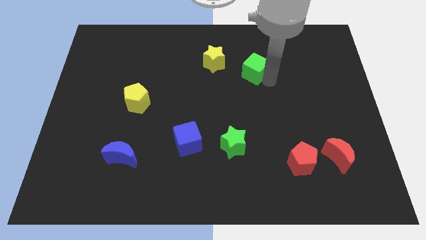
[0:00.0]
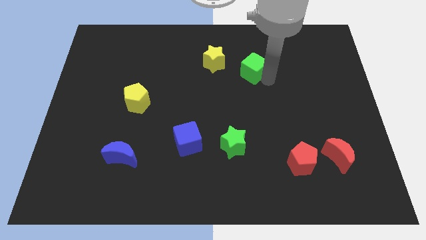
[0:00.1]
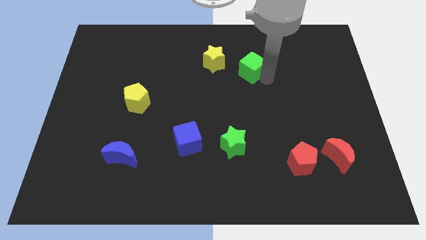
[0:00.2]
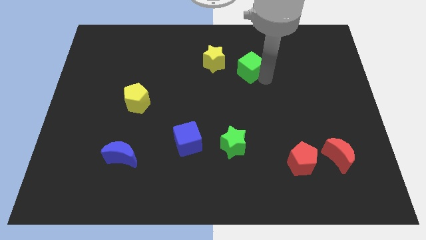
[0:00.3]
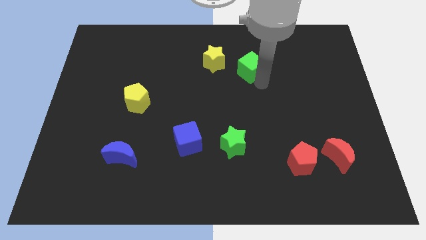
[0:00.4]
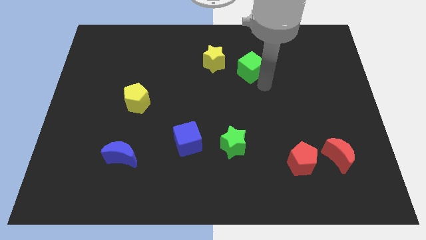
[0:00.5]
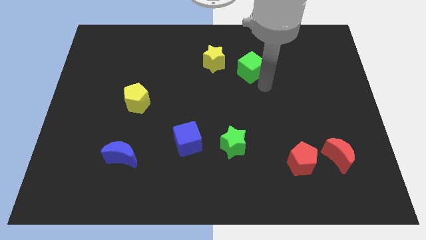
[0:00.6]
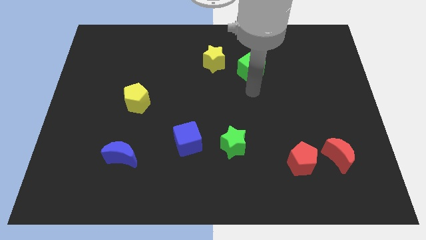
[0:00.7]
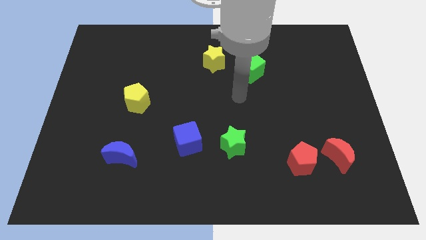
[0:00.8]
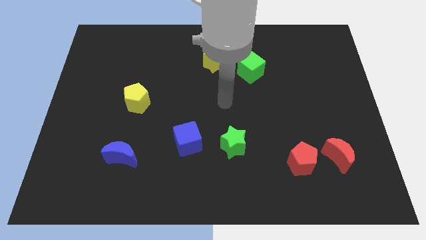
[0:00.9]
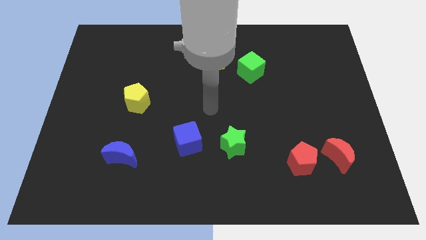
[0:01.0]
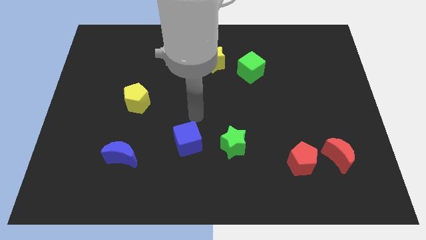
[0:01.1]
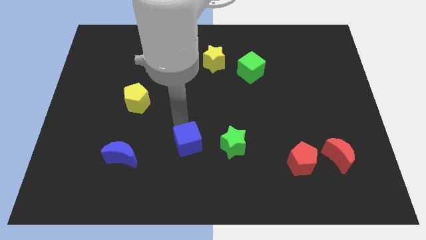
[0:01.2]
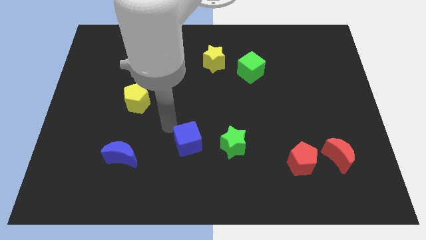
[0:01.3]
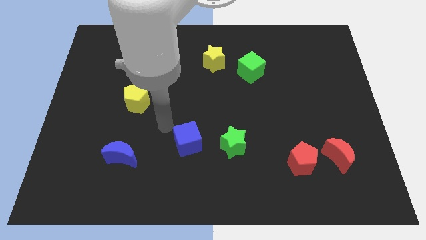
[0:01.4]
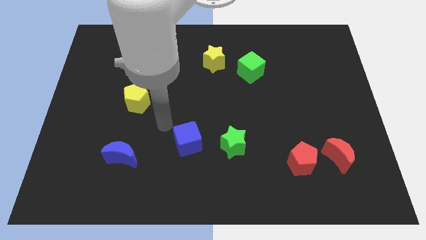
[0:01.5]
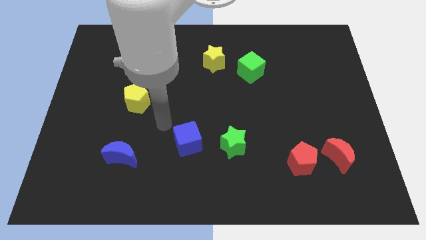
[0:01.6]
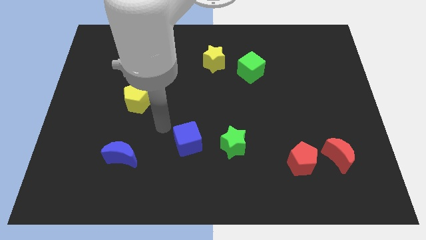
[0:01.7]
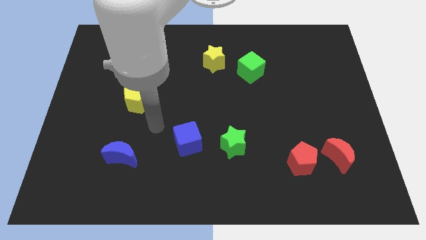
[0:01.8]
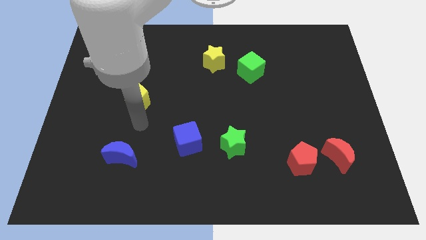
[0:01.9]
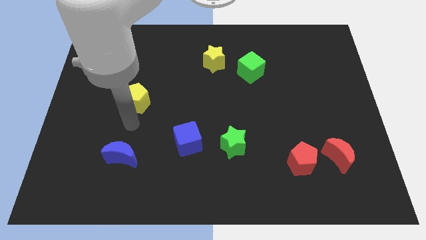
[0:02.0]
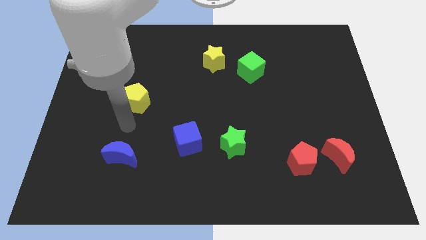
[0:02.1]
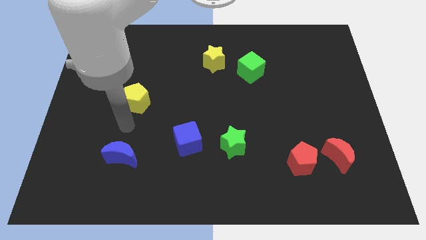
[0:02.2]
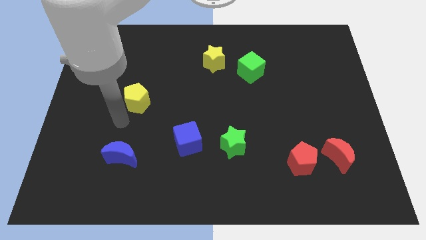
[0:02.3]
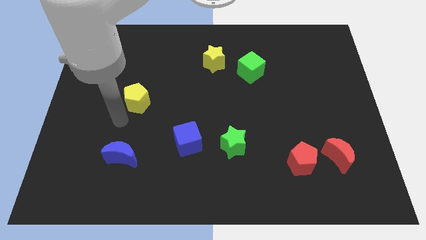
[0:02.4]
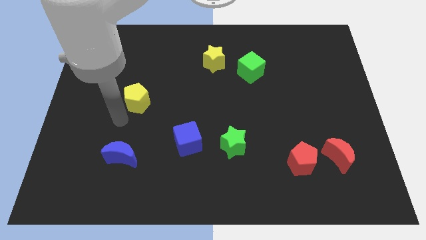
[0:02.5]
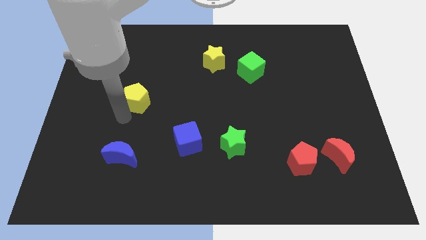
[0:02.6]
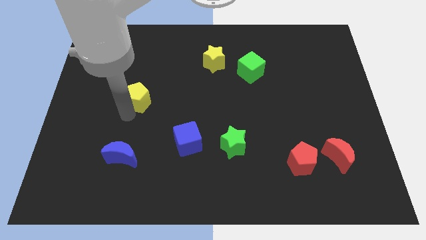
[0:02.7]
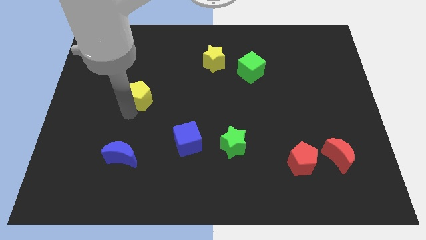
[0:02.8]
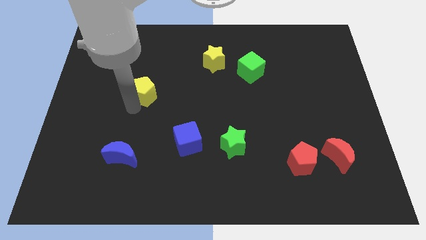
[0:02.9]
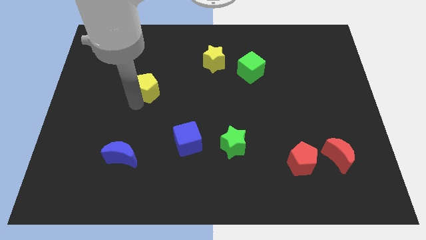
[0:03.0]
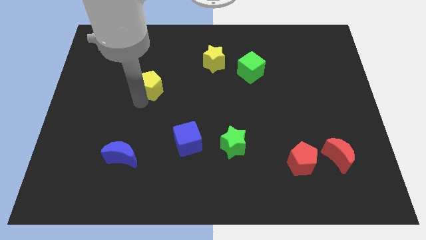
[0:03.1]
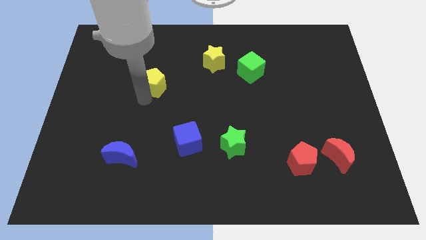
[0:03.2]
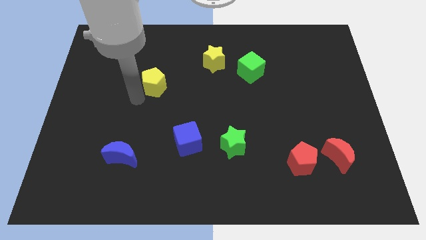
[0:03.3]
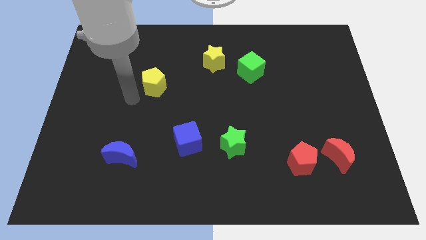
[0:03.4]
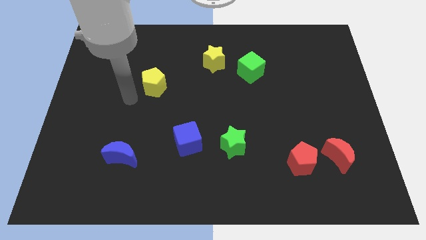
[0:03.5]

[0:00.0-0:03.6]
move the yellow pentagon upwards

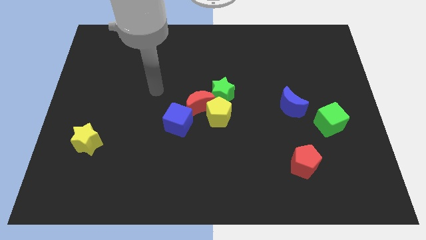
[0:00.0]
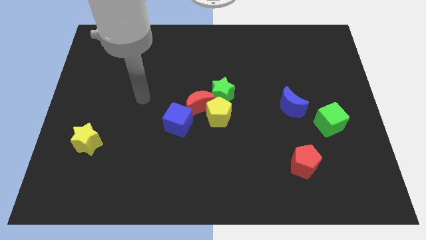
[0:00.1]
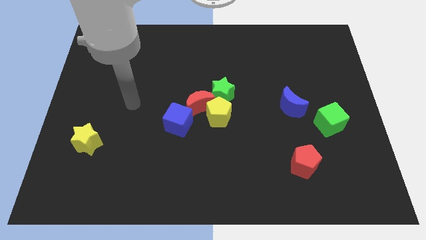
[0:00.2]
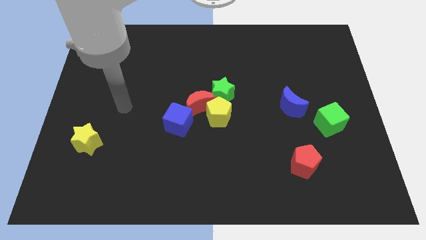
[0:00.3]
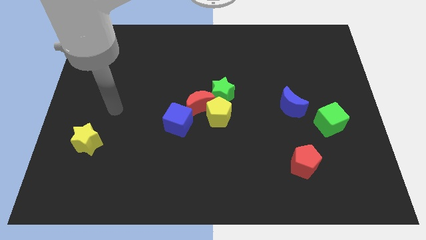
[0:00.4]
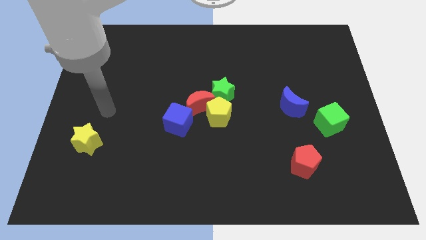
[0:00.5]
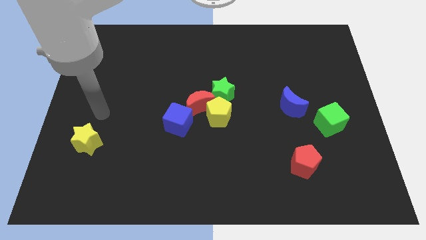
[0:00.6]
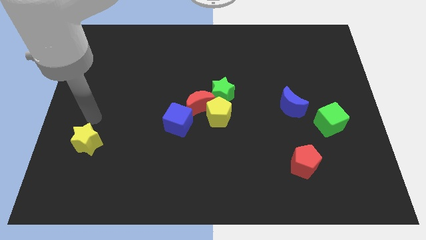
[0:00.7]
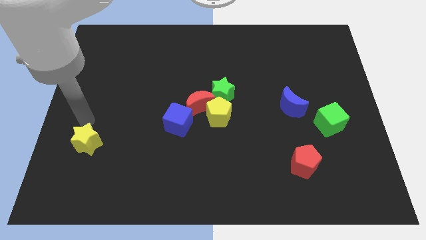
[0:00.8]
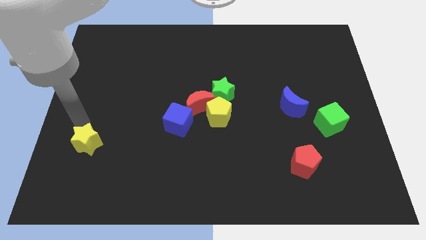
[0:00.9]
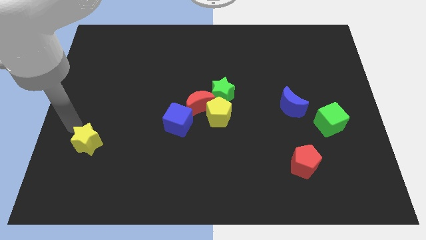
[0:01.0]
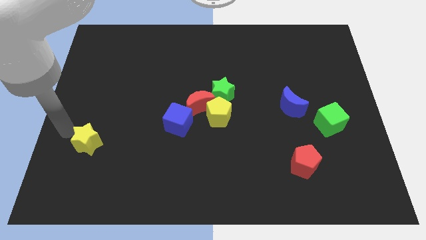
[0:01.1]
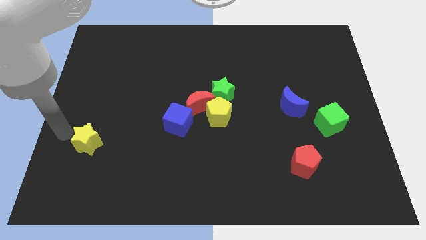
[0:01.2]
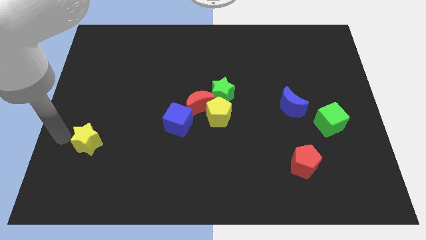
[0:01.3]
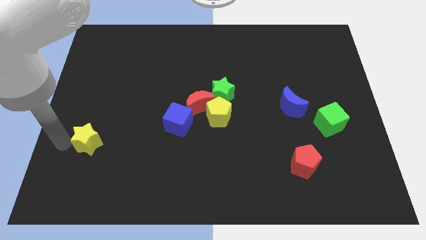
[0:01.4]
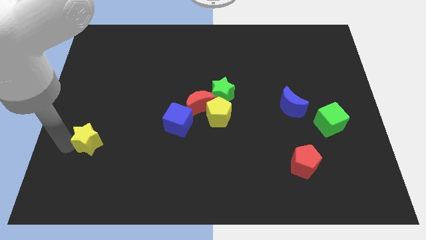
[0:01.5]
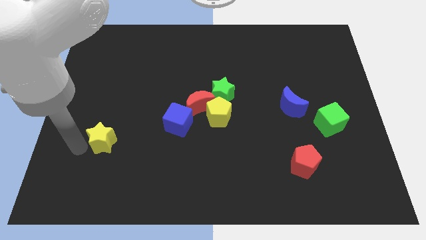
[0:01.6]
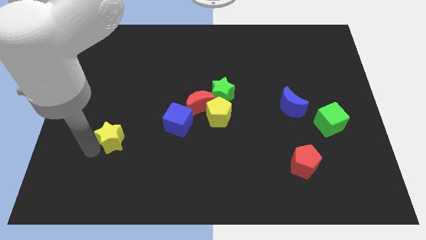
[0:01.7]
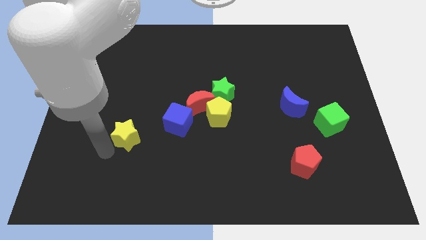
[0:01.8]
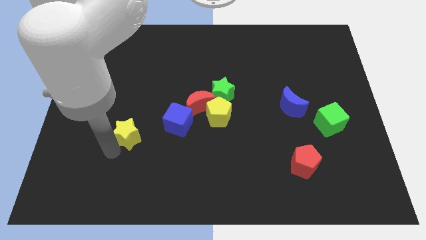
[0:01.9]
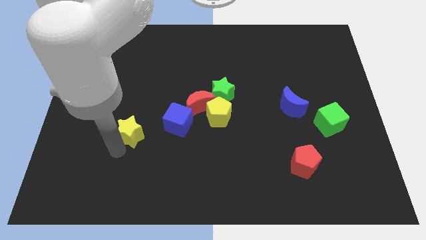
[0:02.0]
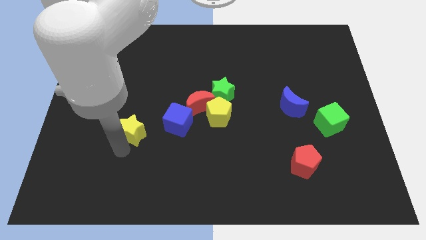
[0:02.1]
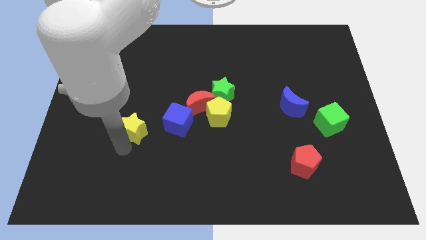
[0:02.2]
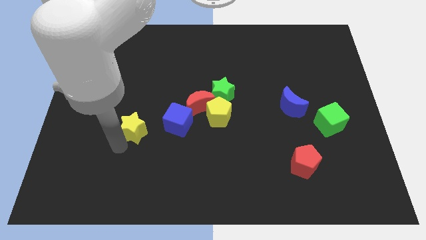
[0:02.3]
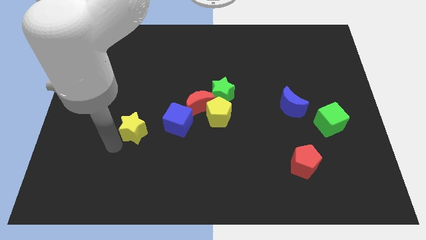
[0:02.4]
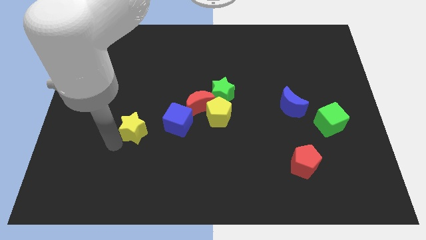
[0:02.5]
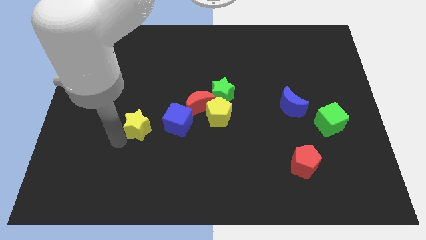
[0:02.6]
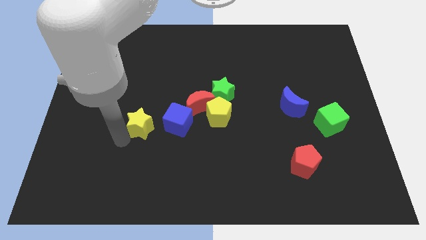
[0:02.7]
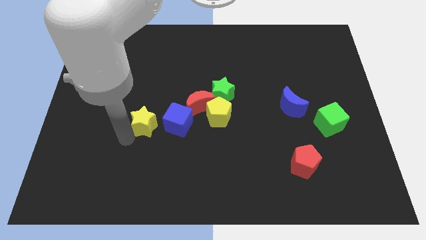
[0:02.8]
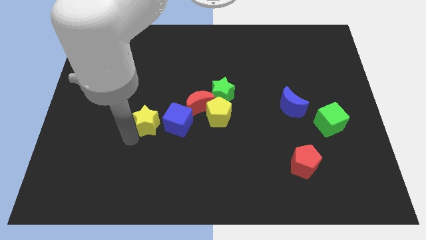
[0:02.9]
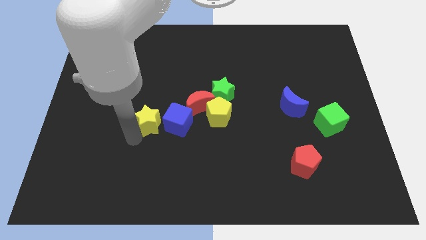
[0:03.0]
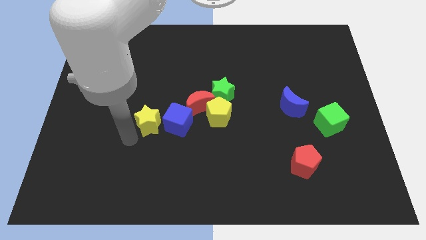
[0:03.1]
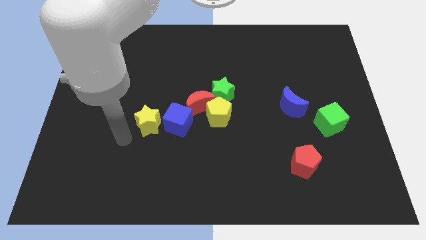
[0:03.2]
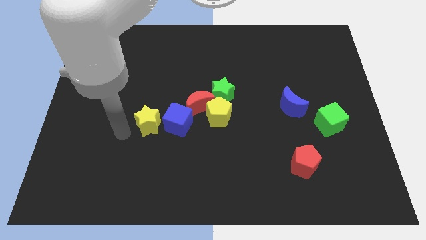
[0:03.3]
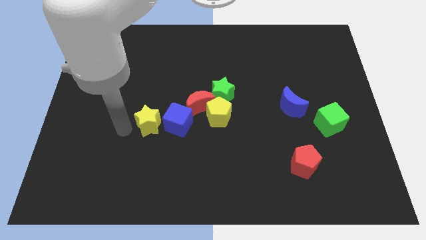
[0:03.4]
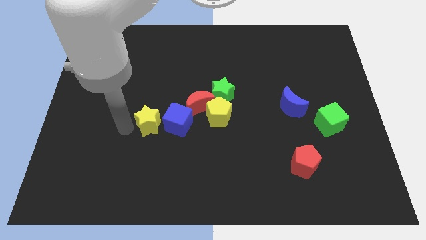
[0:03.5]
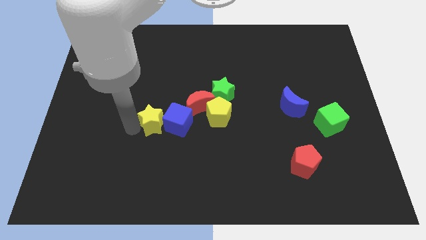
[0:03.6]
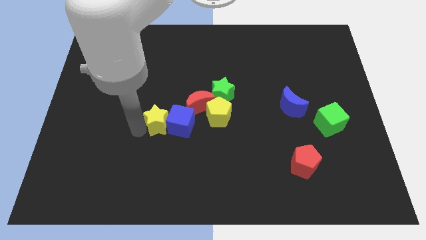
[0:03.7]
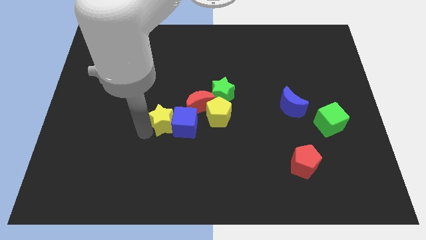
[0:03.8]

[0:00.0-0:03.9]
slide the yellow star into the blue cube

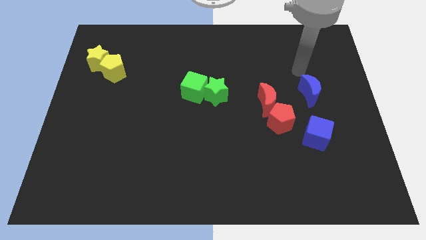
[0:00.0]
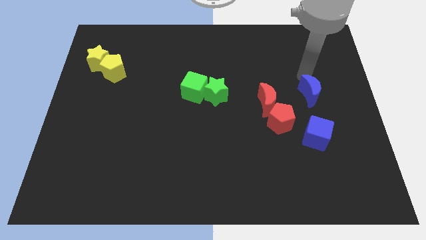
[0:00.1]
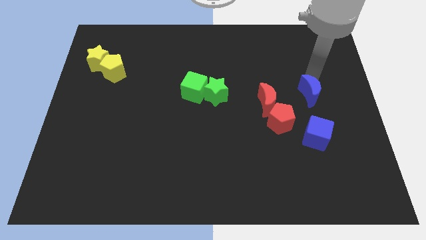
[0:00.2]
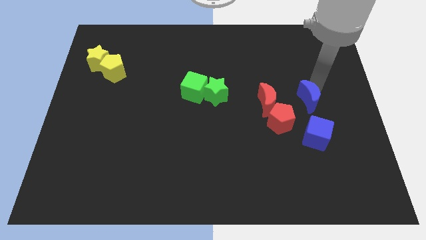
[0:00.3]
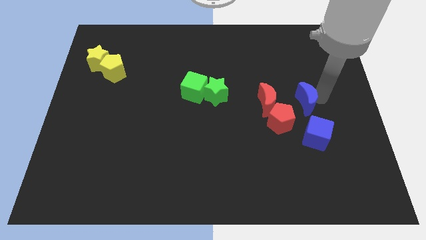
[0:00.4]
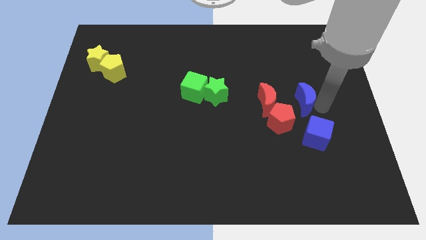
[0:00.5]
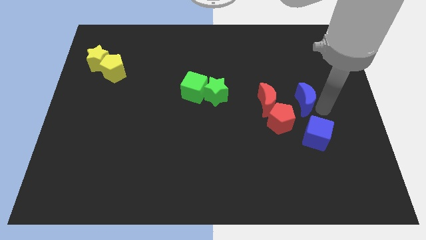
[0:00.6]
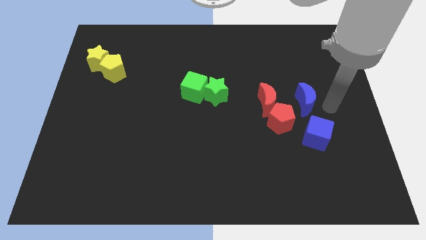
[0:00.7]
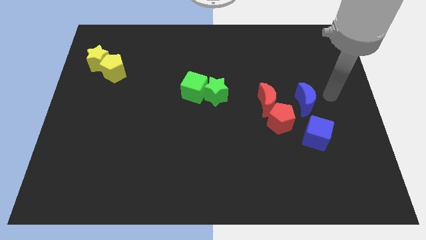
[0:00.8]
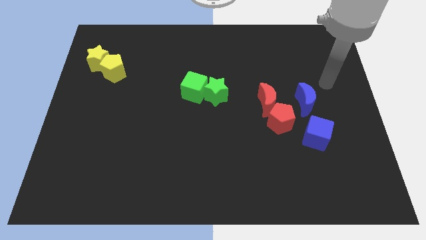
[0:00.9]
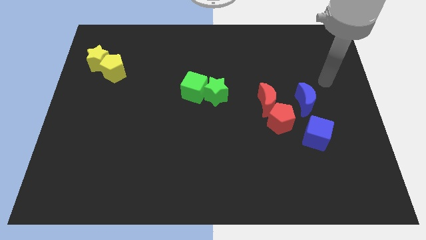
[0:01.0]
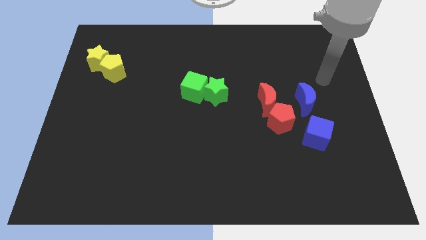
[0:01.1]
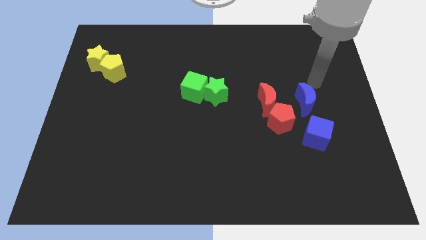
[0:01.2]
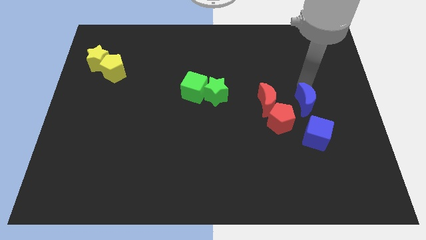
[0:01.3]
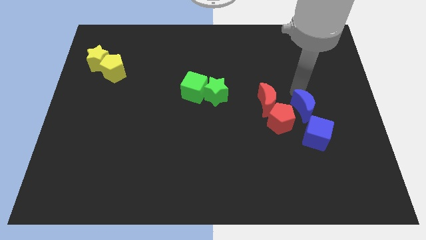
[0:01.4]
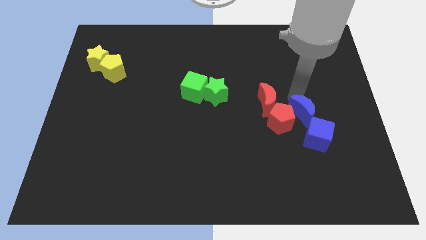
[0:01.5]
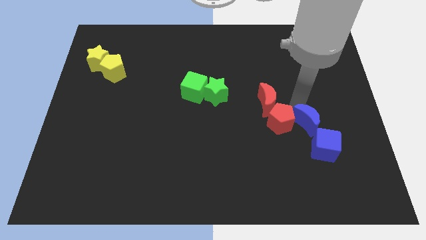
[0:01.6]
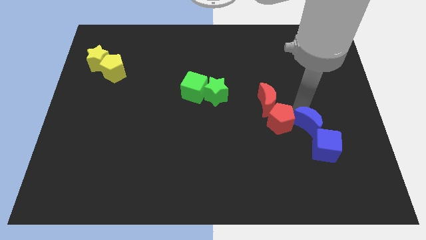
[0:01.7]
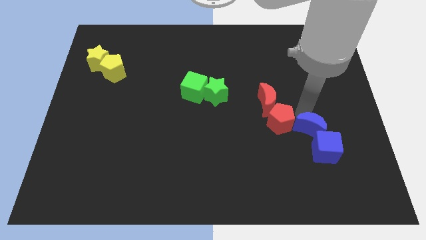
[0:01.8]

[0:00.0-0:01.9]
move the blue moon close to the blue cube
